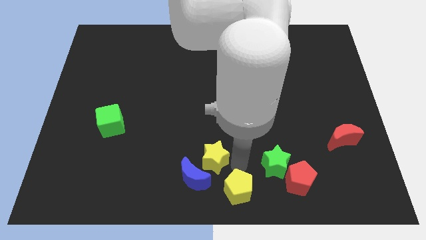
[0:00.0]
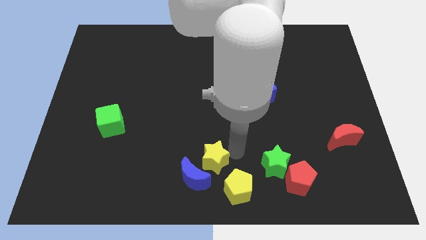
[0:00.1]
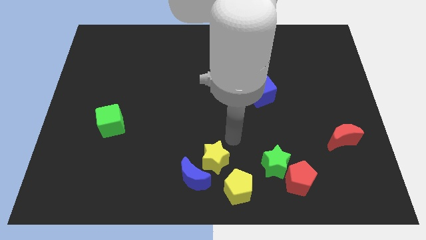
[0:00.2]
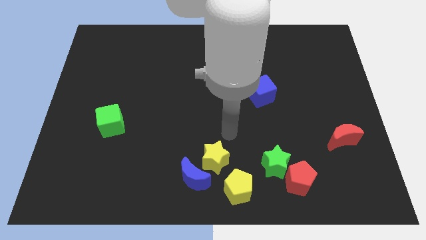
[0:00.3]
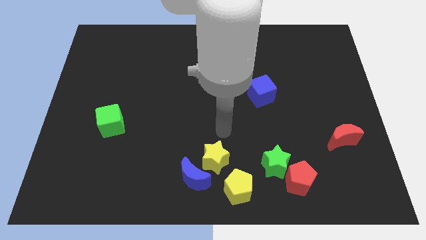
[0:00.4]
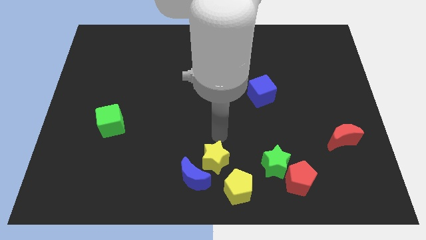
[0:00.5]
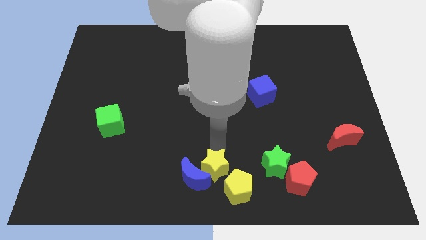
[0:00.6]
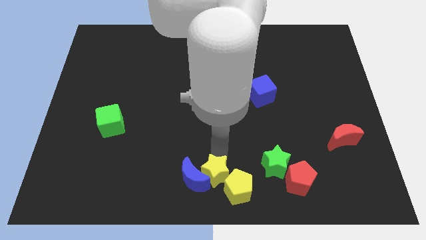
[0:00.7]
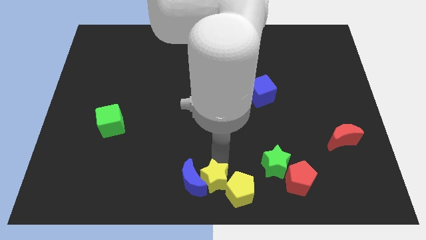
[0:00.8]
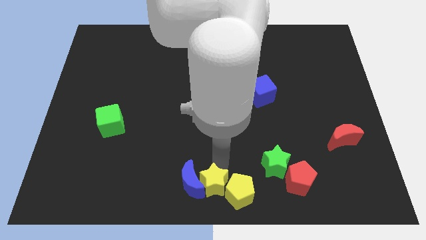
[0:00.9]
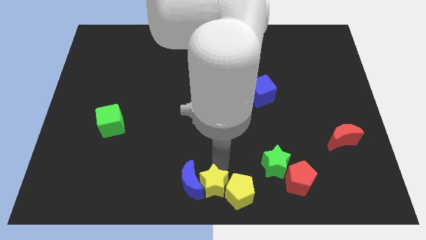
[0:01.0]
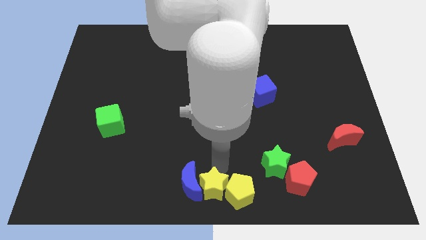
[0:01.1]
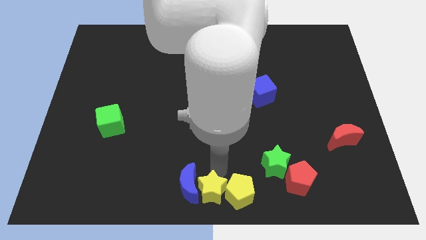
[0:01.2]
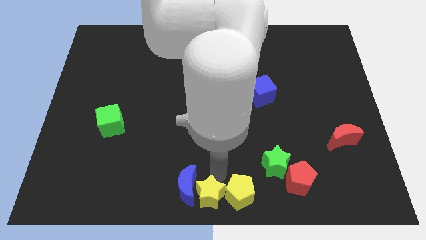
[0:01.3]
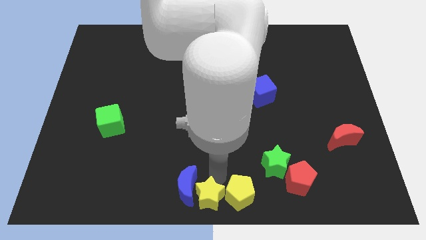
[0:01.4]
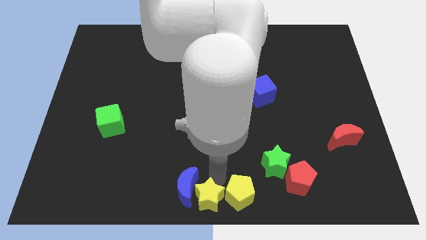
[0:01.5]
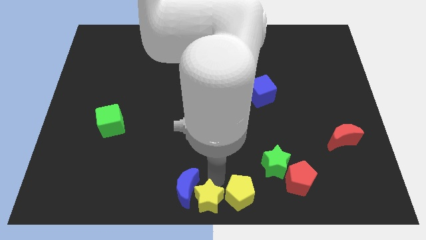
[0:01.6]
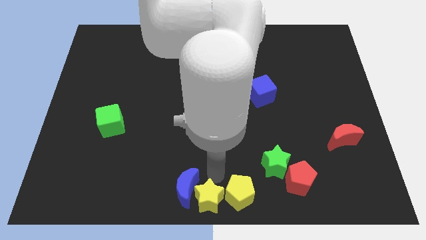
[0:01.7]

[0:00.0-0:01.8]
move the yellow star in between the yellow pentagon and blue moon

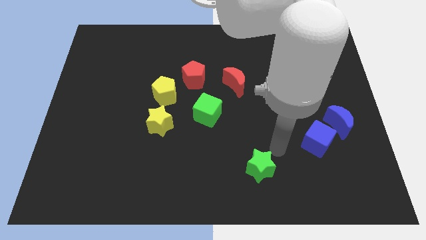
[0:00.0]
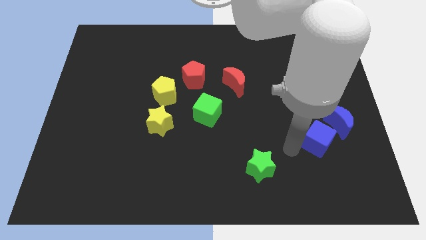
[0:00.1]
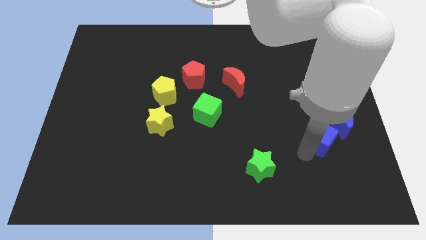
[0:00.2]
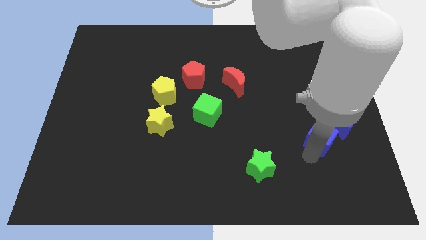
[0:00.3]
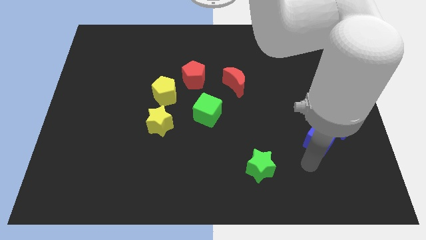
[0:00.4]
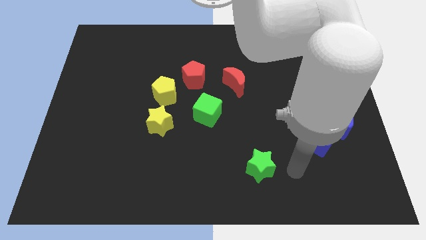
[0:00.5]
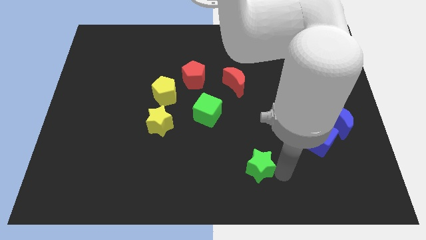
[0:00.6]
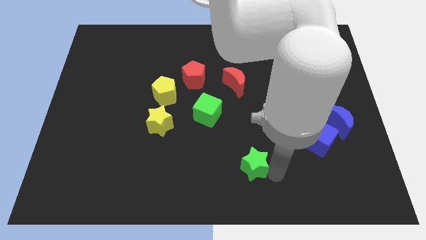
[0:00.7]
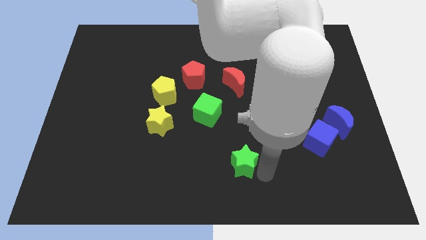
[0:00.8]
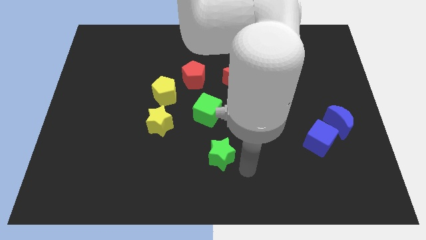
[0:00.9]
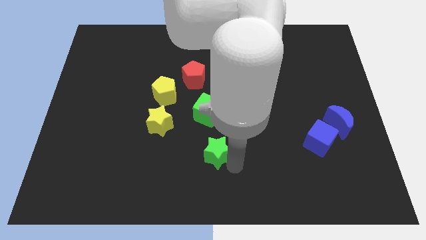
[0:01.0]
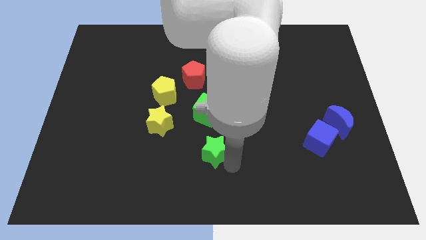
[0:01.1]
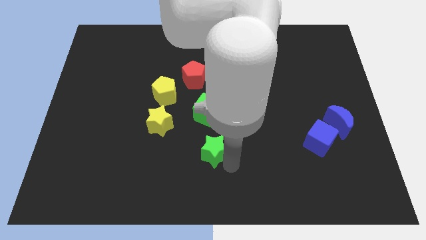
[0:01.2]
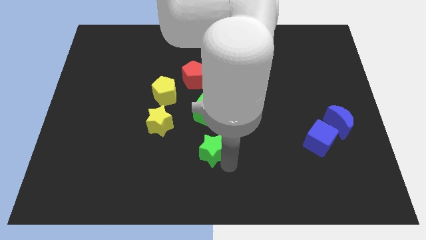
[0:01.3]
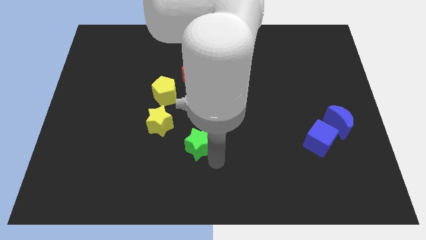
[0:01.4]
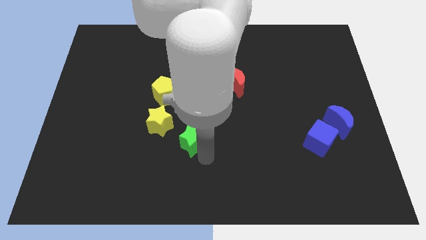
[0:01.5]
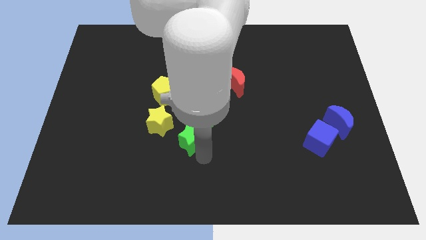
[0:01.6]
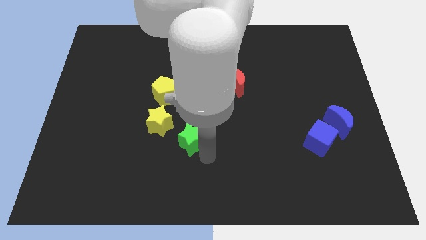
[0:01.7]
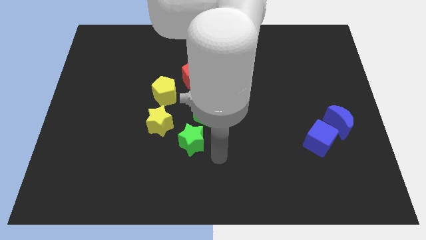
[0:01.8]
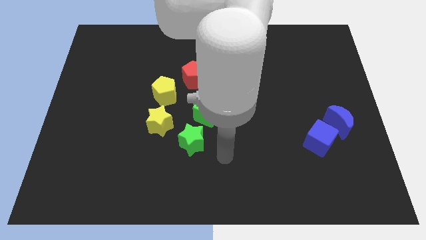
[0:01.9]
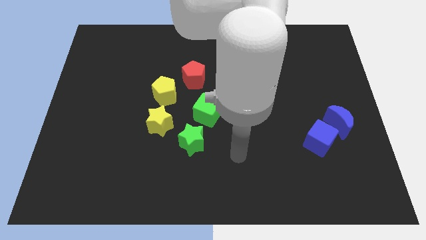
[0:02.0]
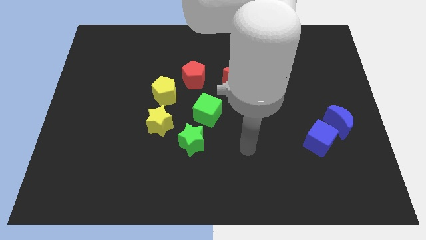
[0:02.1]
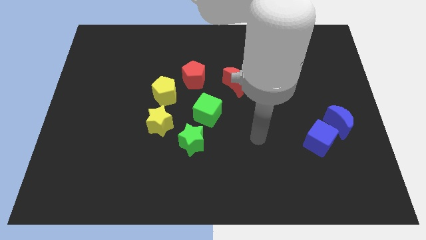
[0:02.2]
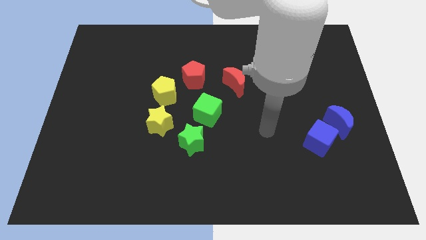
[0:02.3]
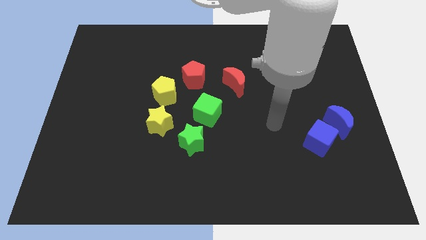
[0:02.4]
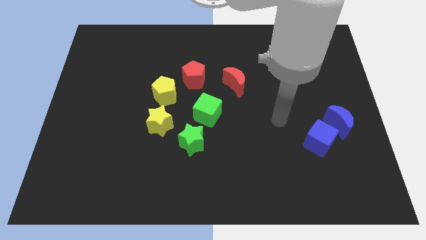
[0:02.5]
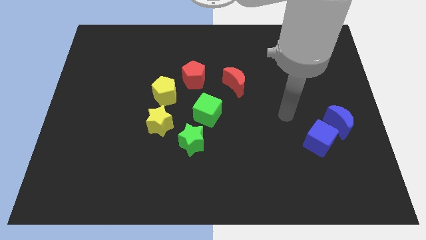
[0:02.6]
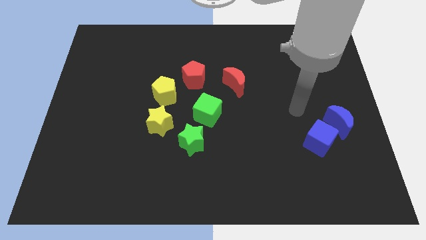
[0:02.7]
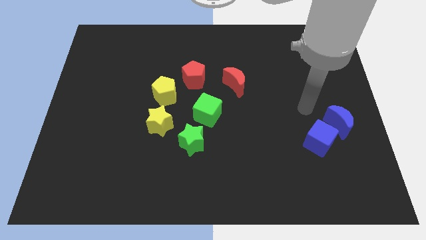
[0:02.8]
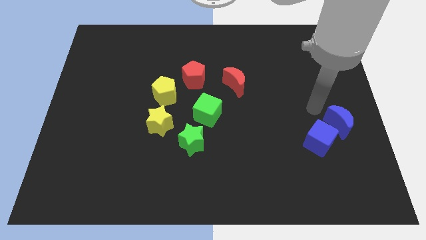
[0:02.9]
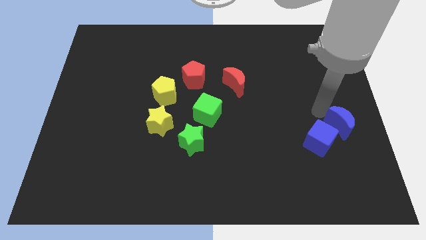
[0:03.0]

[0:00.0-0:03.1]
place green star to the right of yellow star

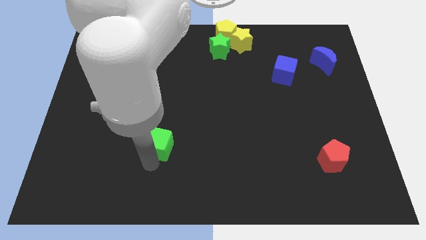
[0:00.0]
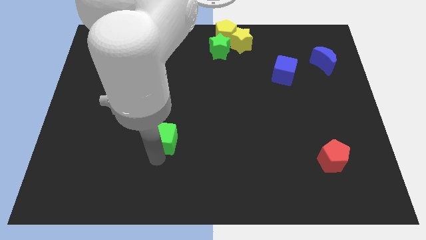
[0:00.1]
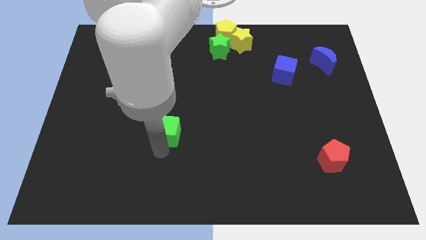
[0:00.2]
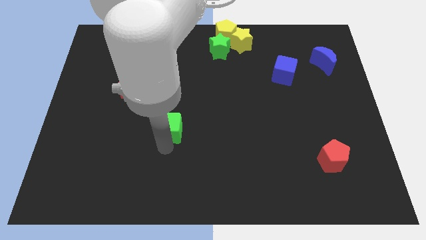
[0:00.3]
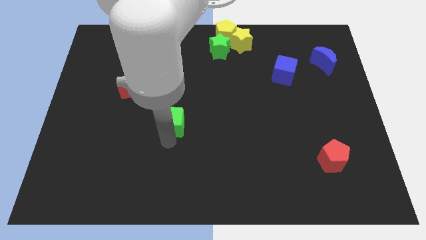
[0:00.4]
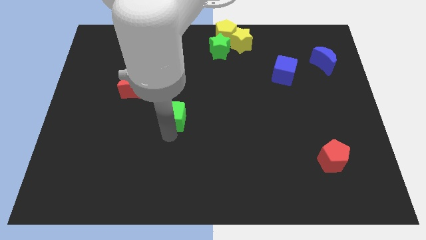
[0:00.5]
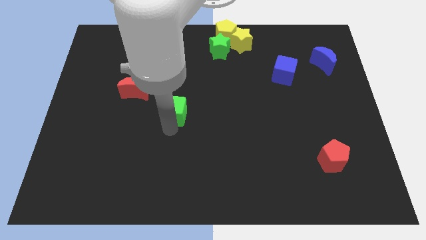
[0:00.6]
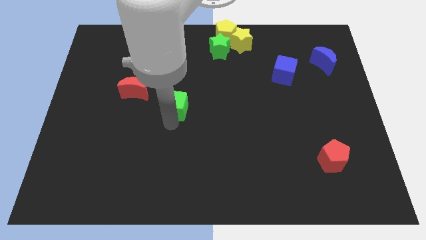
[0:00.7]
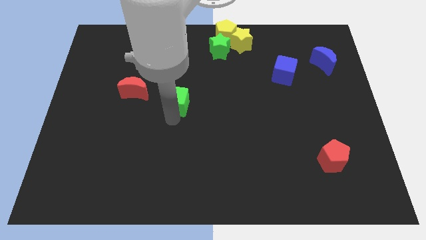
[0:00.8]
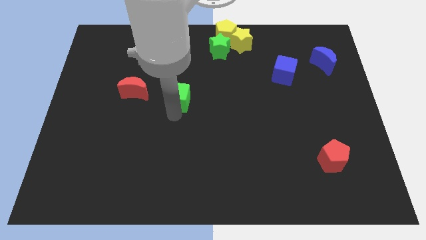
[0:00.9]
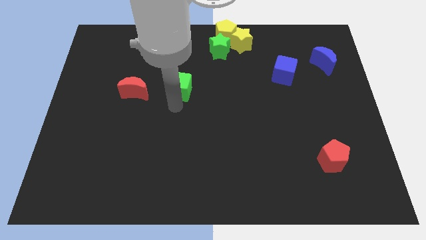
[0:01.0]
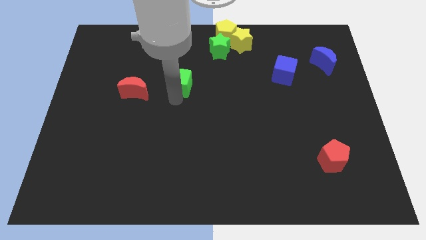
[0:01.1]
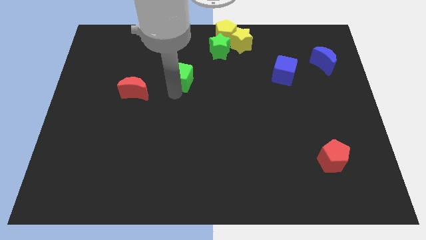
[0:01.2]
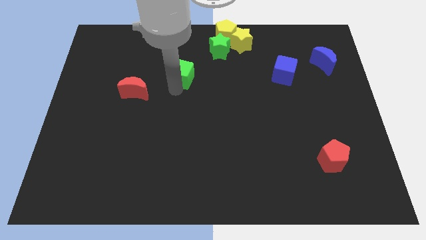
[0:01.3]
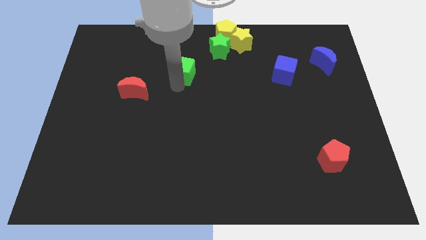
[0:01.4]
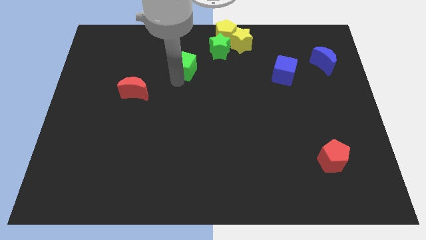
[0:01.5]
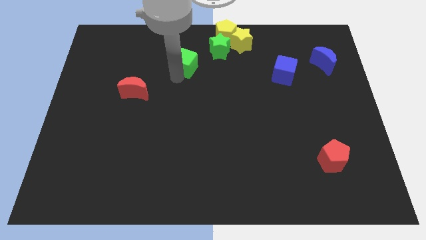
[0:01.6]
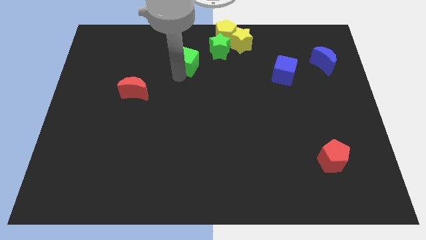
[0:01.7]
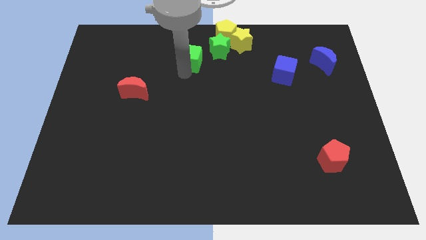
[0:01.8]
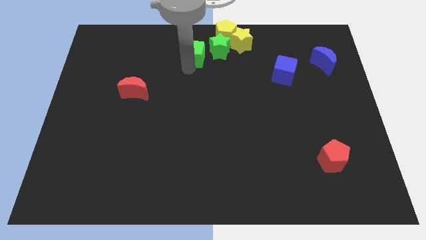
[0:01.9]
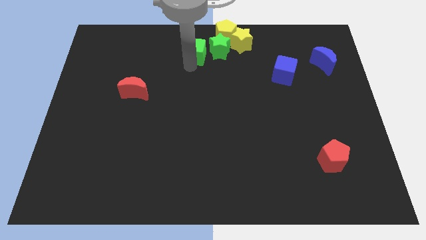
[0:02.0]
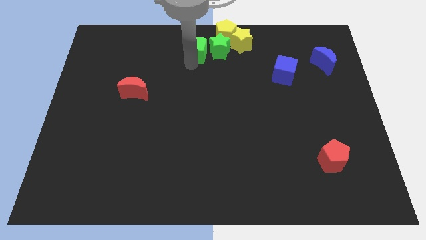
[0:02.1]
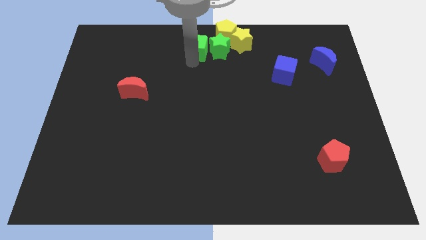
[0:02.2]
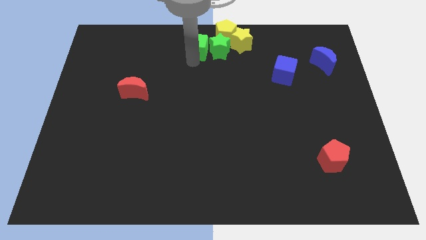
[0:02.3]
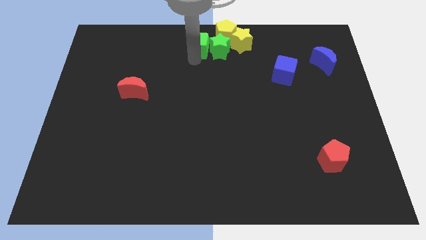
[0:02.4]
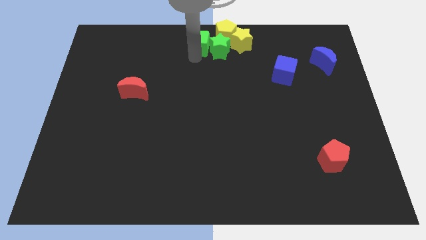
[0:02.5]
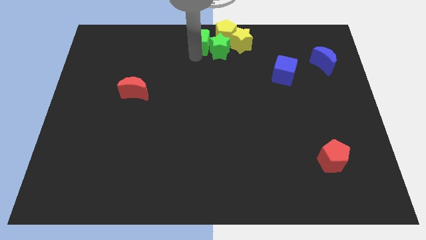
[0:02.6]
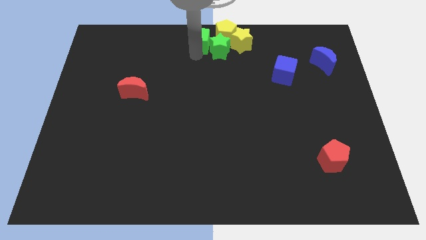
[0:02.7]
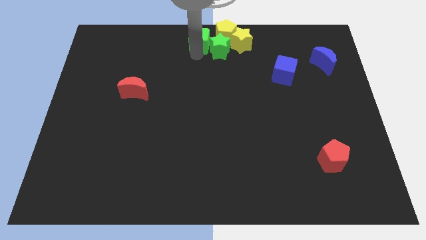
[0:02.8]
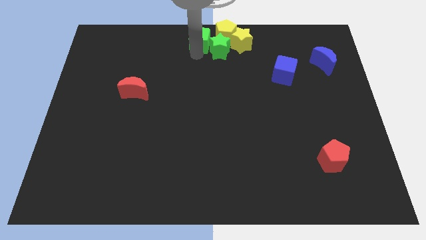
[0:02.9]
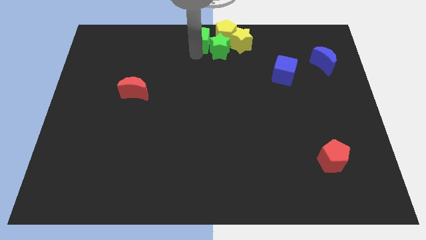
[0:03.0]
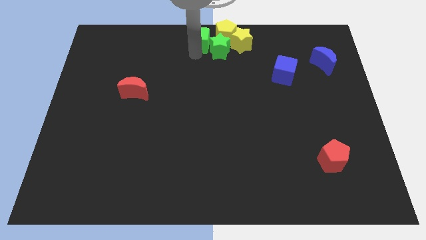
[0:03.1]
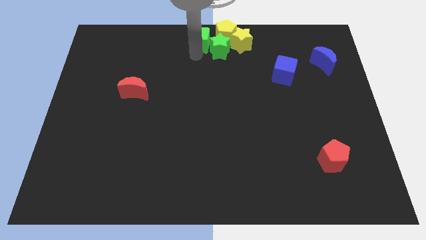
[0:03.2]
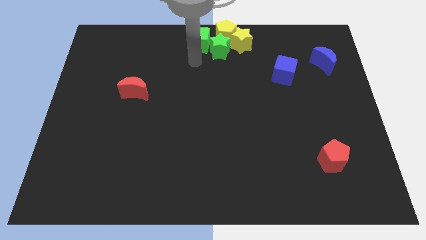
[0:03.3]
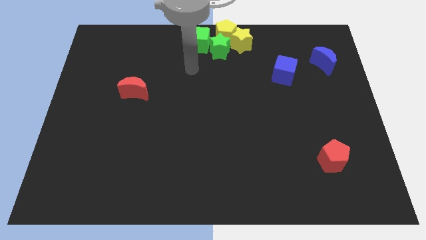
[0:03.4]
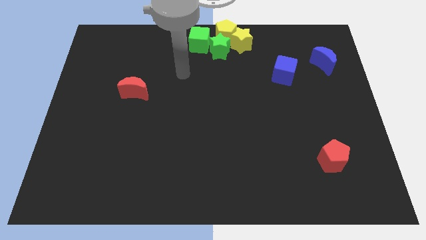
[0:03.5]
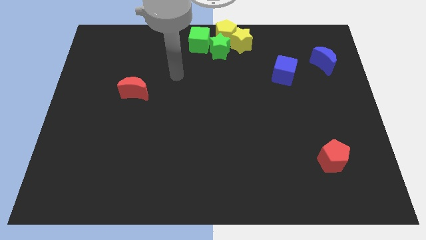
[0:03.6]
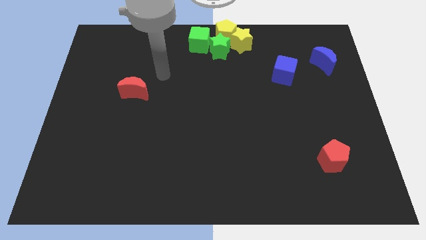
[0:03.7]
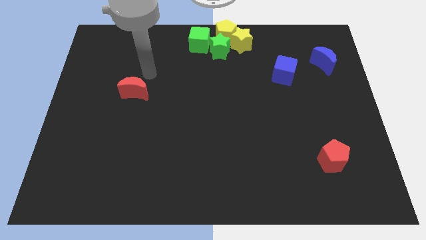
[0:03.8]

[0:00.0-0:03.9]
move the green cube to the bottom left of the yellow pentagon
